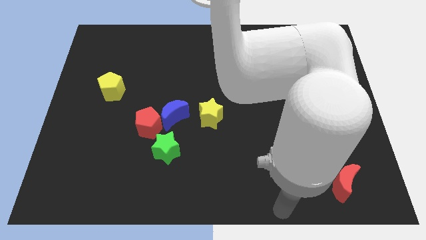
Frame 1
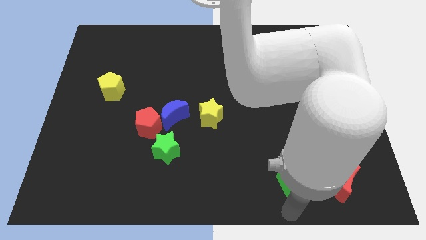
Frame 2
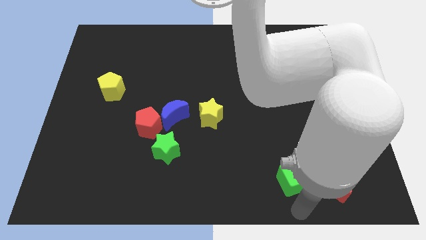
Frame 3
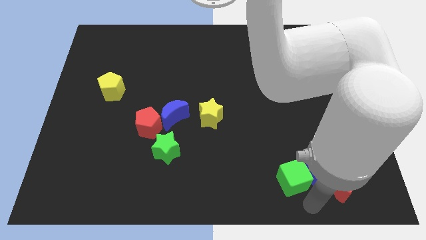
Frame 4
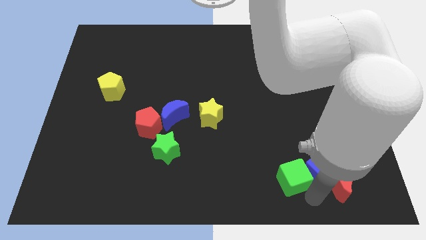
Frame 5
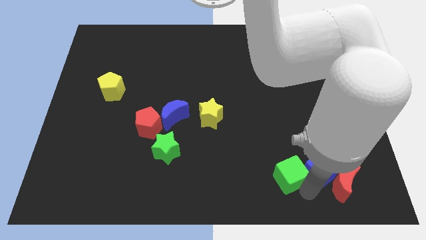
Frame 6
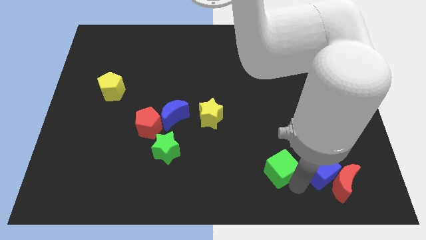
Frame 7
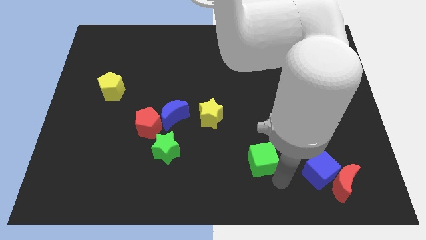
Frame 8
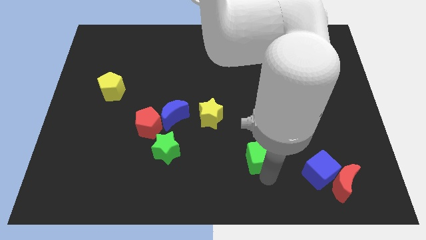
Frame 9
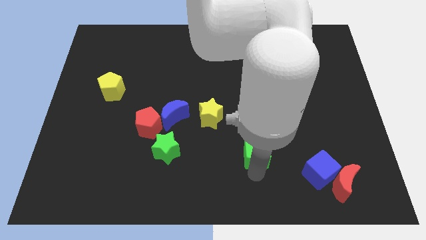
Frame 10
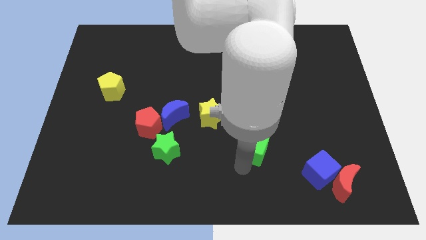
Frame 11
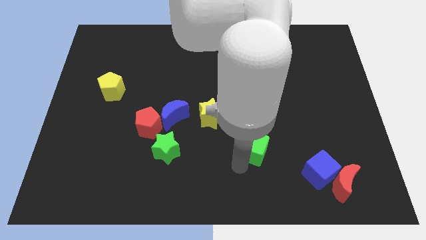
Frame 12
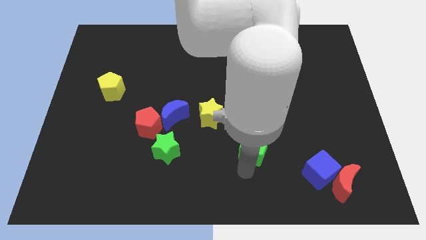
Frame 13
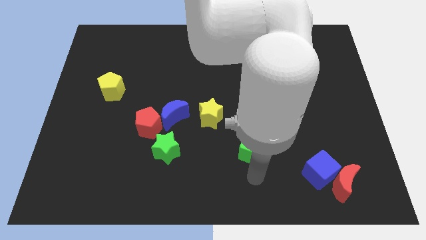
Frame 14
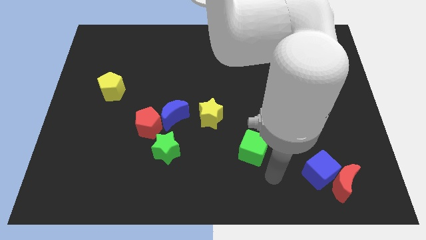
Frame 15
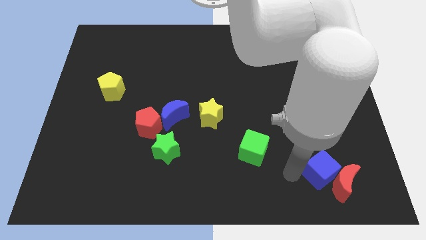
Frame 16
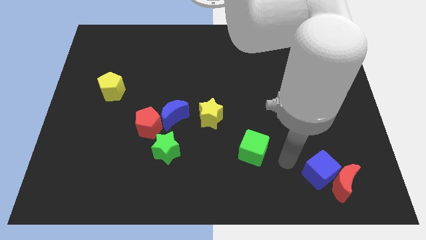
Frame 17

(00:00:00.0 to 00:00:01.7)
push green cube slightly to the left

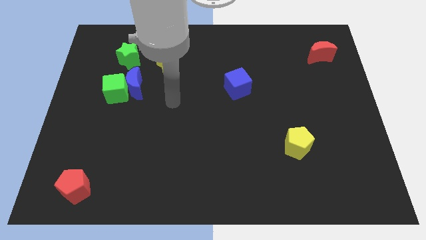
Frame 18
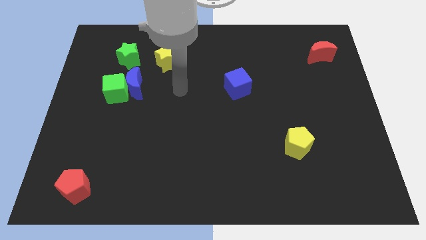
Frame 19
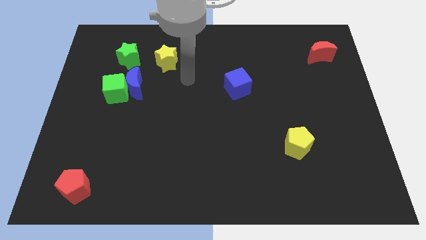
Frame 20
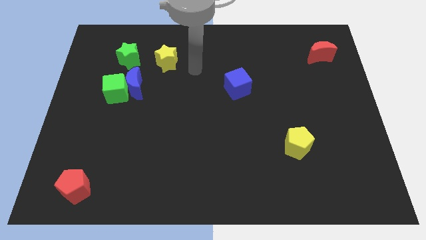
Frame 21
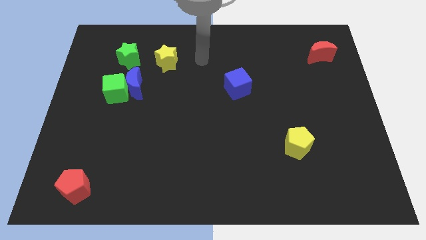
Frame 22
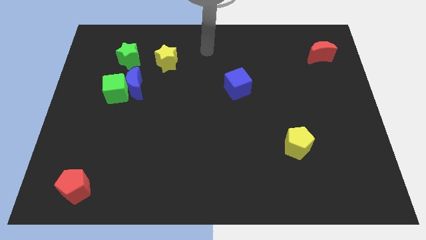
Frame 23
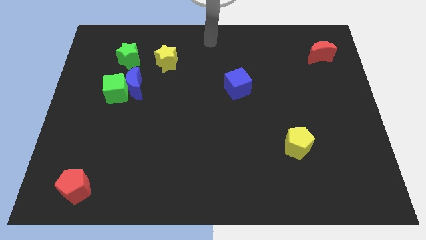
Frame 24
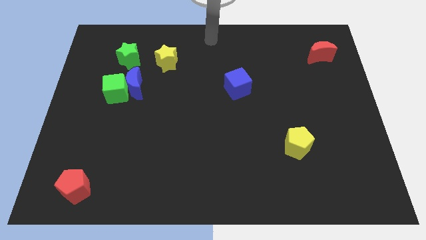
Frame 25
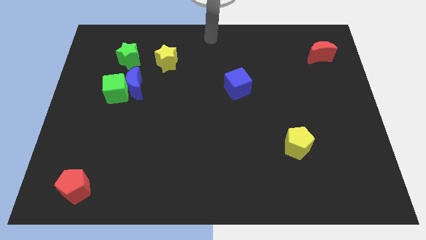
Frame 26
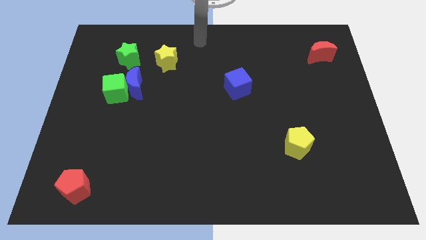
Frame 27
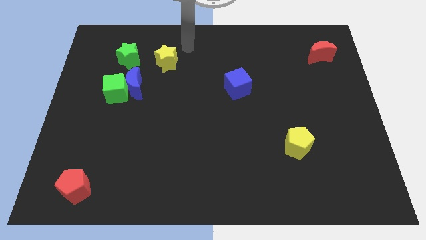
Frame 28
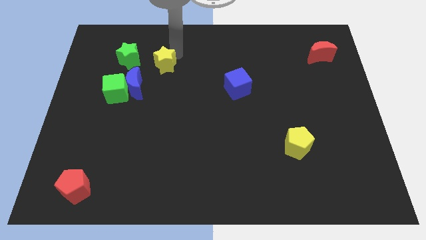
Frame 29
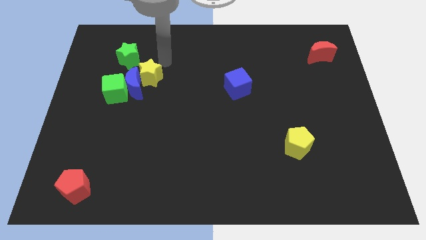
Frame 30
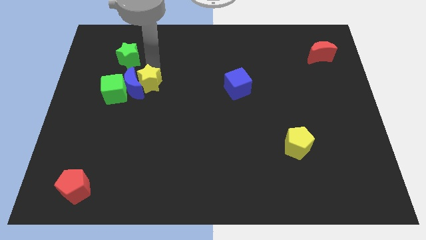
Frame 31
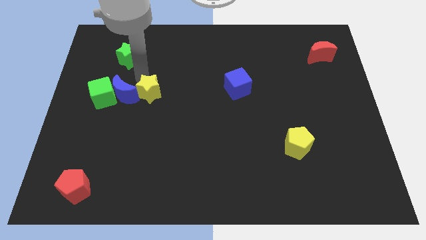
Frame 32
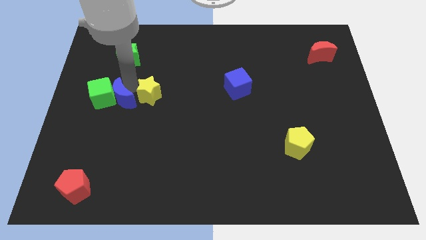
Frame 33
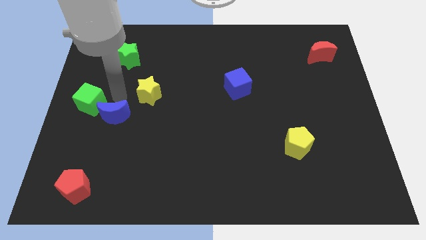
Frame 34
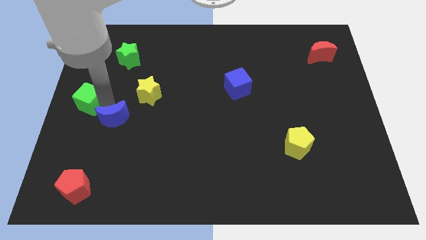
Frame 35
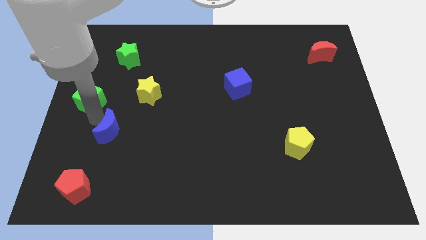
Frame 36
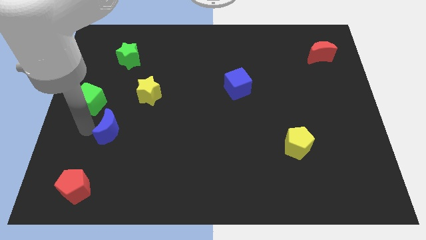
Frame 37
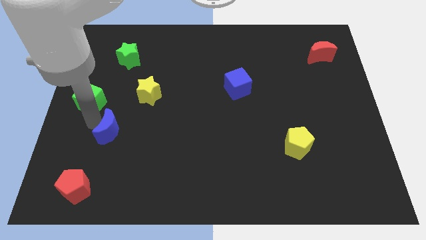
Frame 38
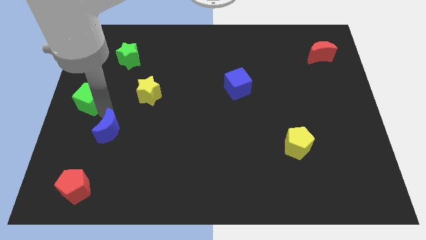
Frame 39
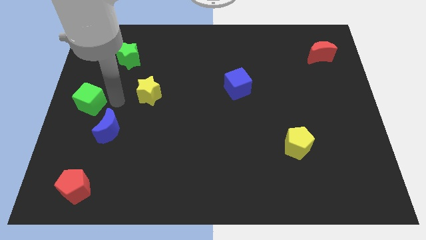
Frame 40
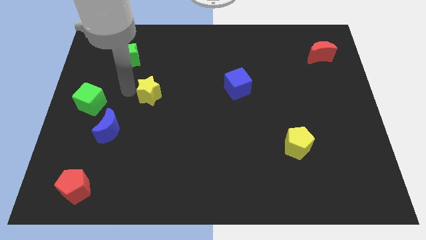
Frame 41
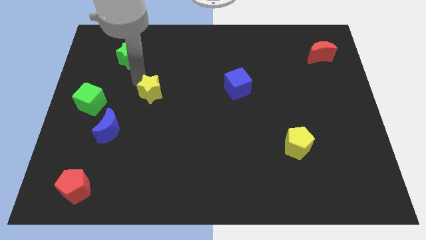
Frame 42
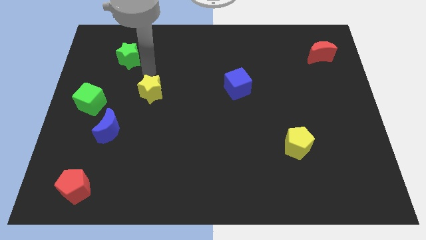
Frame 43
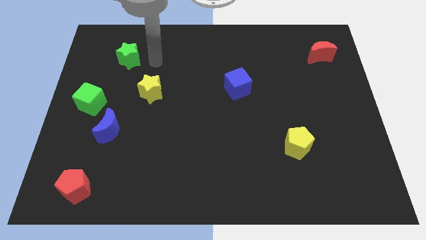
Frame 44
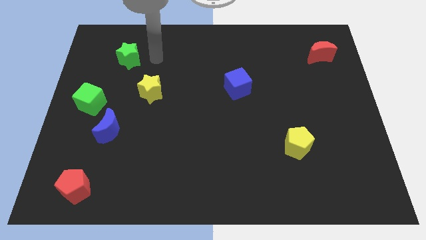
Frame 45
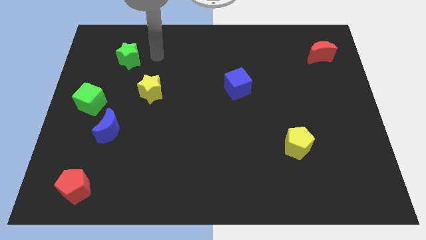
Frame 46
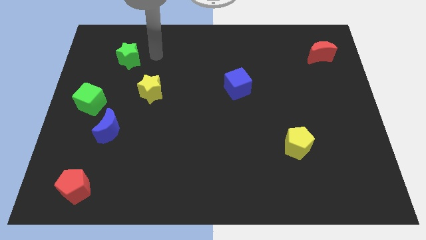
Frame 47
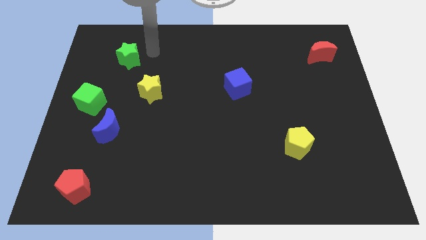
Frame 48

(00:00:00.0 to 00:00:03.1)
separate the green cube from the blue moon

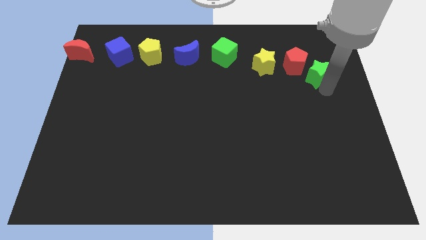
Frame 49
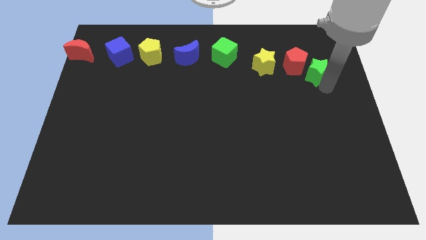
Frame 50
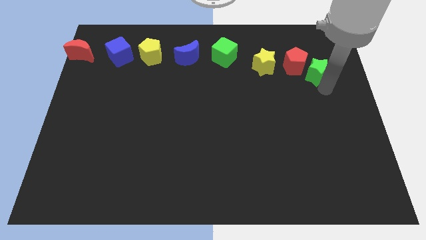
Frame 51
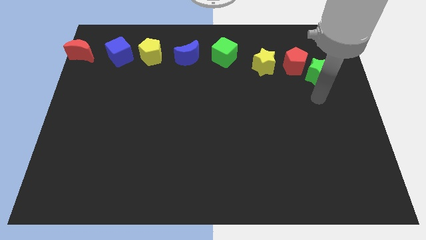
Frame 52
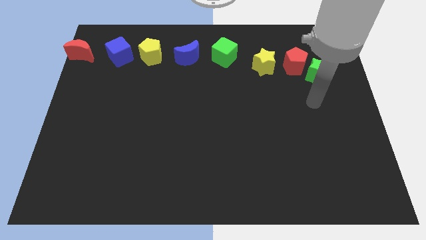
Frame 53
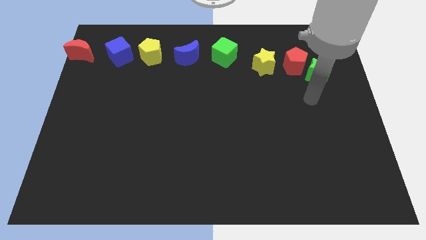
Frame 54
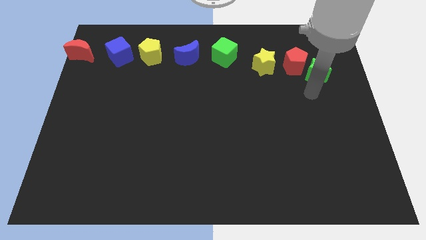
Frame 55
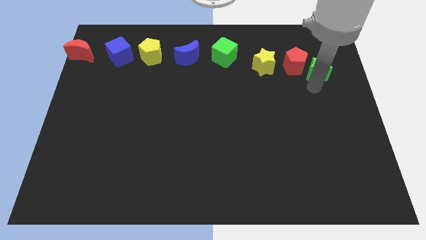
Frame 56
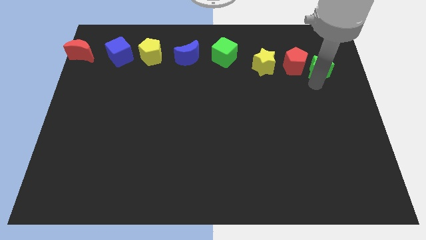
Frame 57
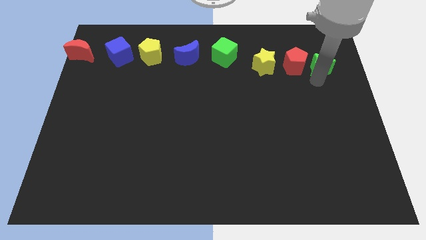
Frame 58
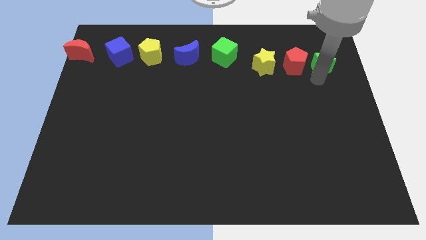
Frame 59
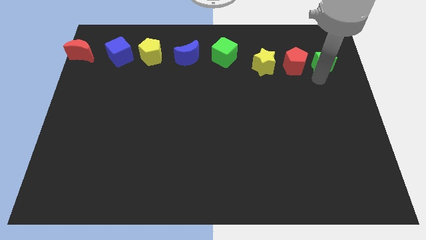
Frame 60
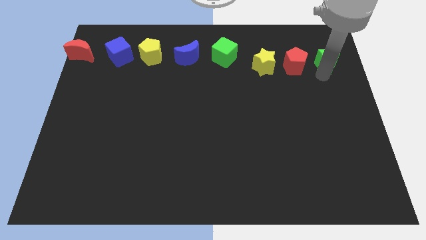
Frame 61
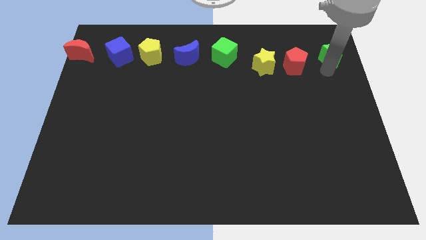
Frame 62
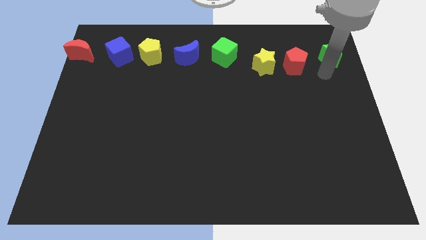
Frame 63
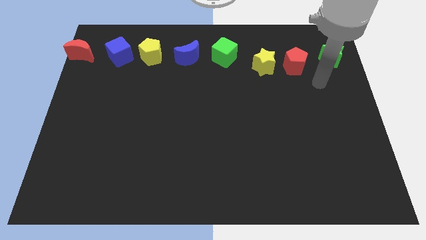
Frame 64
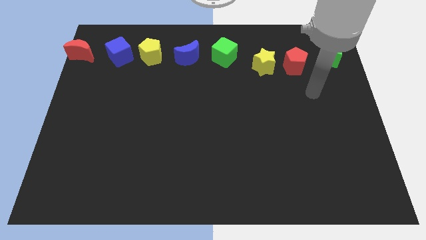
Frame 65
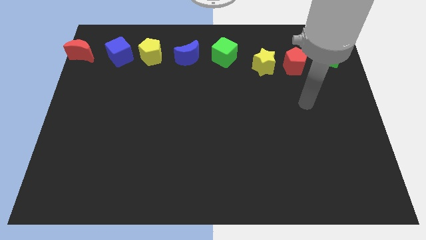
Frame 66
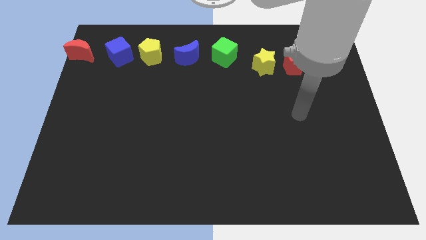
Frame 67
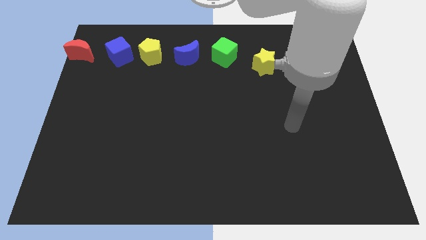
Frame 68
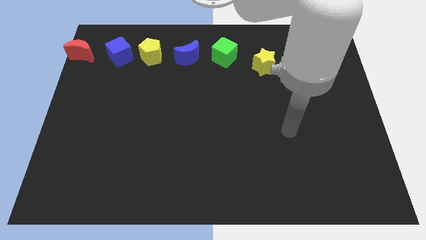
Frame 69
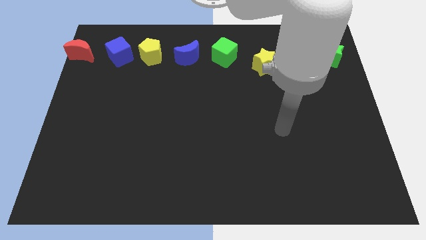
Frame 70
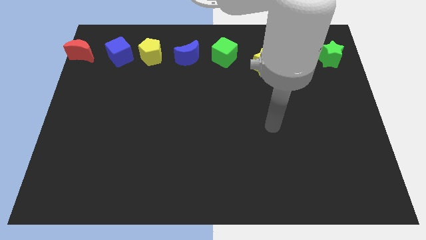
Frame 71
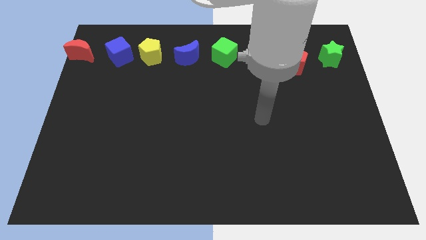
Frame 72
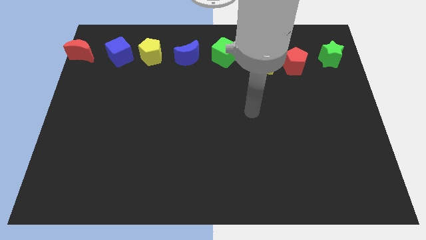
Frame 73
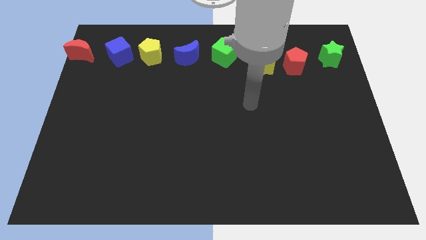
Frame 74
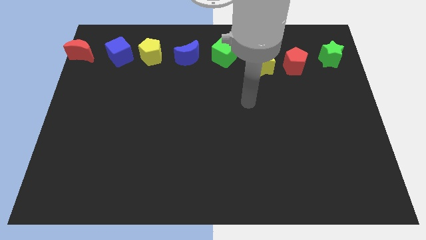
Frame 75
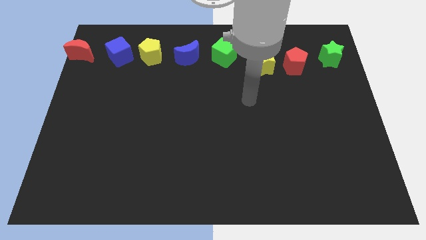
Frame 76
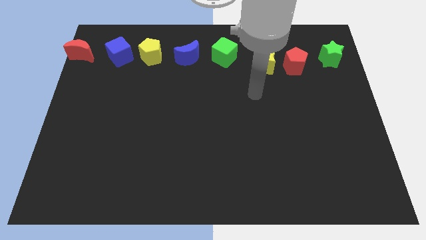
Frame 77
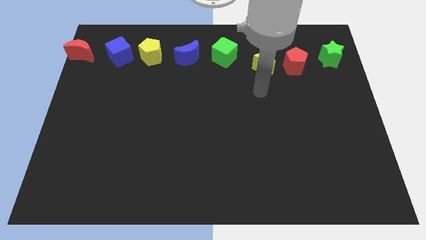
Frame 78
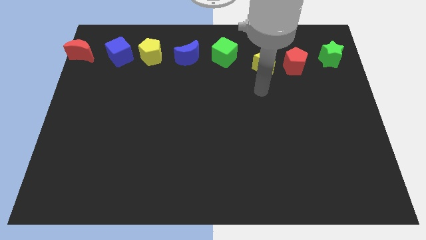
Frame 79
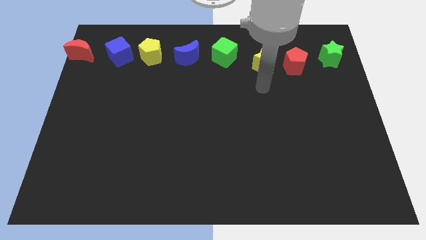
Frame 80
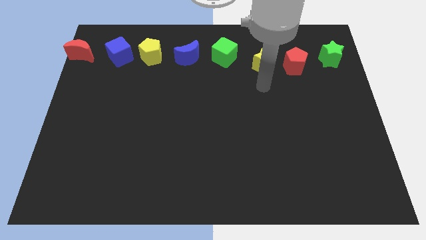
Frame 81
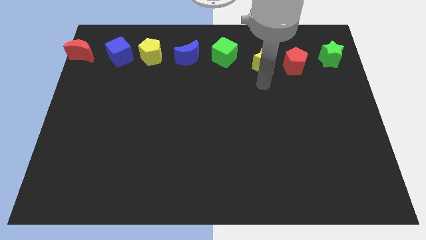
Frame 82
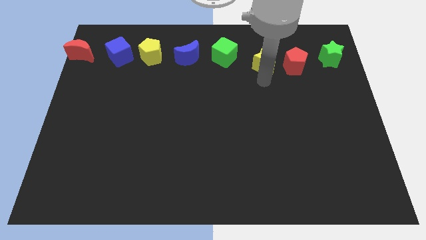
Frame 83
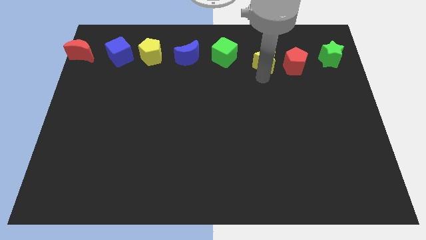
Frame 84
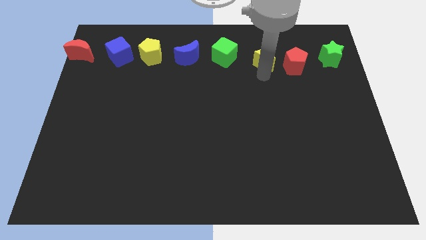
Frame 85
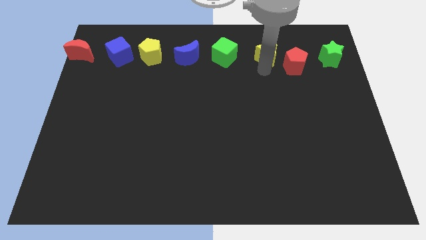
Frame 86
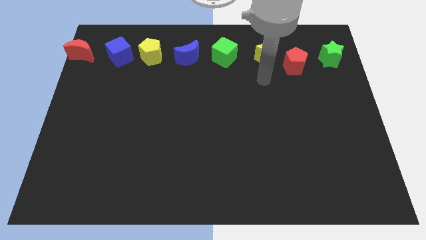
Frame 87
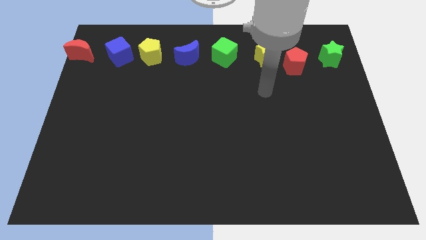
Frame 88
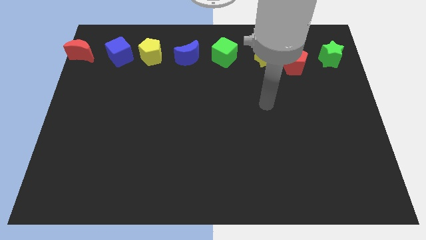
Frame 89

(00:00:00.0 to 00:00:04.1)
slide the yellow star and green star horizontally to the right side of the green cube

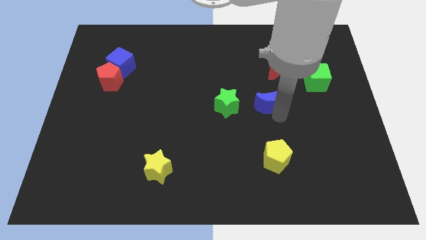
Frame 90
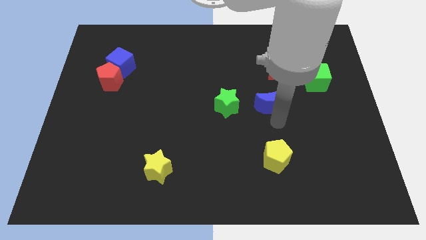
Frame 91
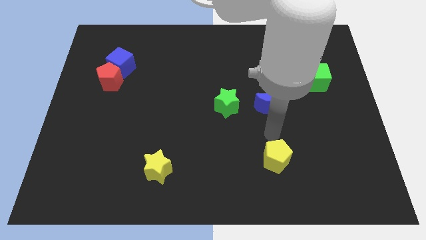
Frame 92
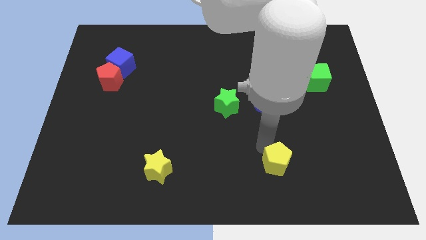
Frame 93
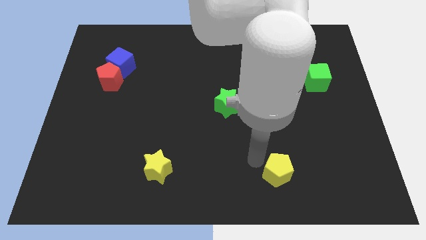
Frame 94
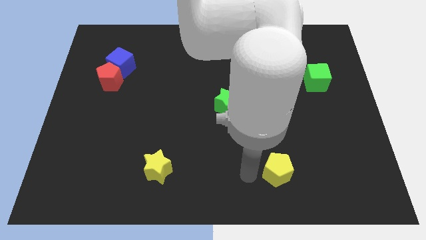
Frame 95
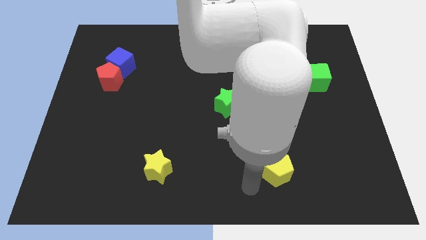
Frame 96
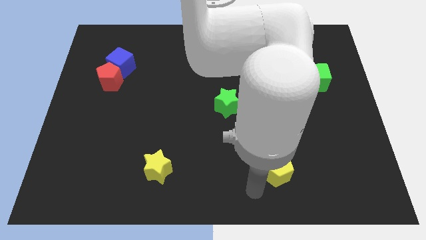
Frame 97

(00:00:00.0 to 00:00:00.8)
touch the top side of the yellow pentagon
